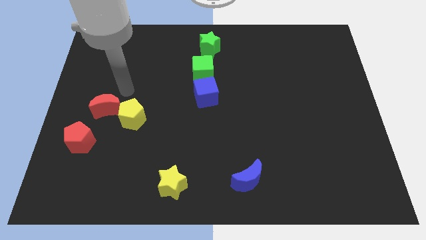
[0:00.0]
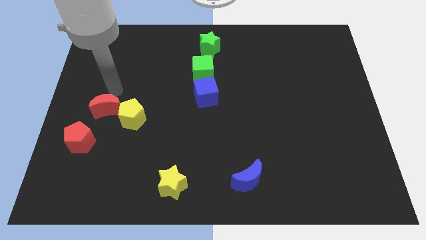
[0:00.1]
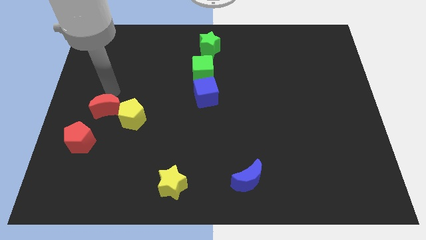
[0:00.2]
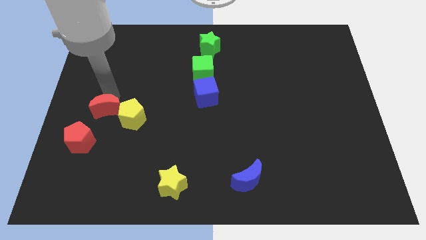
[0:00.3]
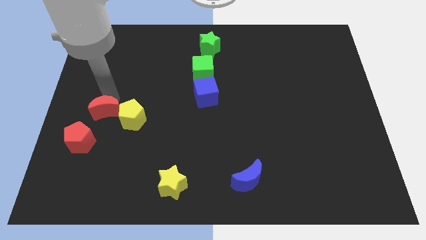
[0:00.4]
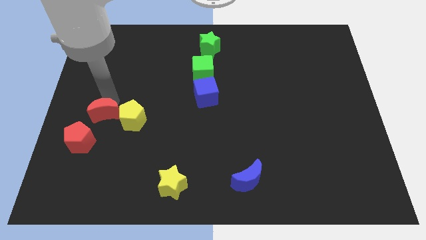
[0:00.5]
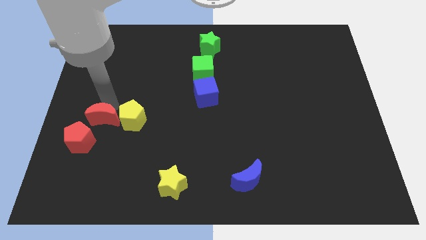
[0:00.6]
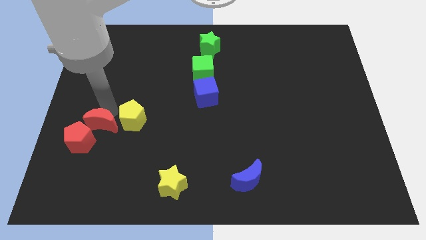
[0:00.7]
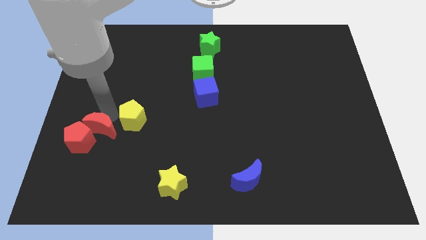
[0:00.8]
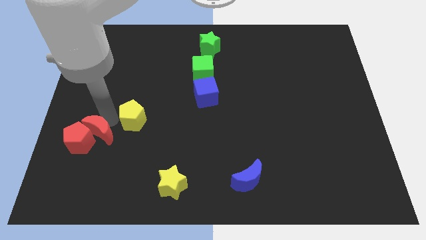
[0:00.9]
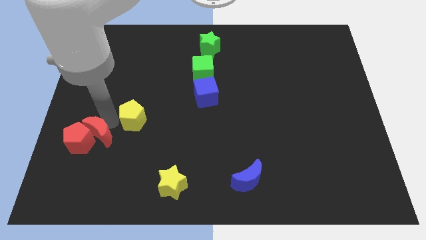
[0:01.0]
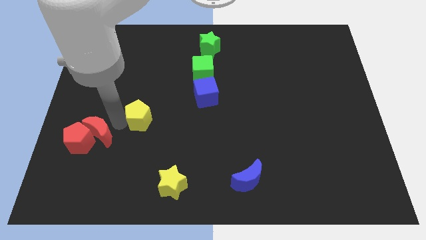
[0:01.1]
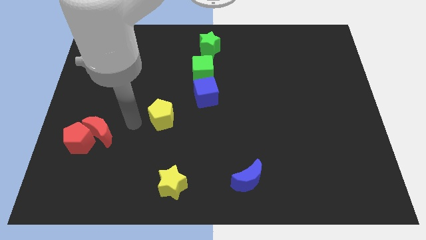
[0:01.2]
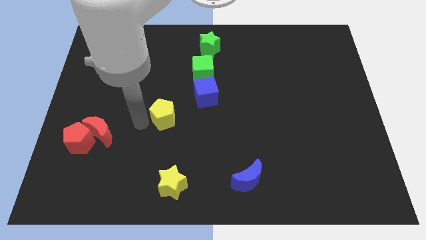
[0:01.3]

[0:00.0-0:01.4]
move the yellow pentagon slightly to the right

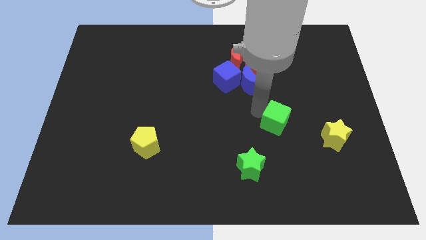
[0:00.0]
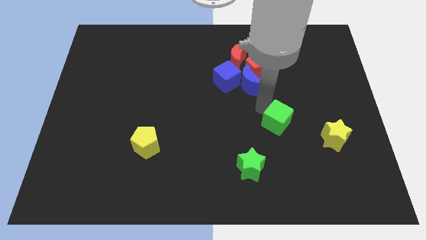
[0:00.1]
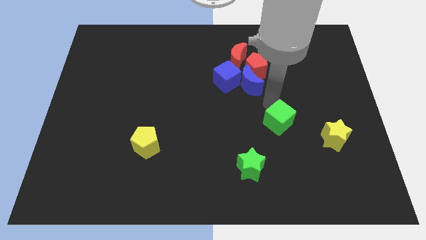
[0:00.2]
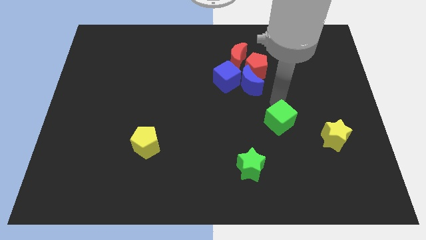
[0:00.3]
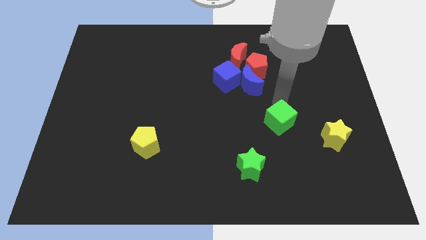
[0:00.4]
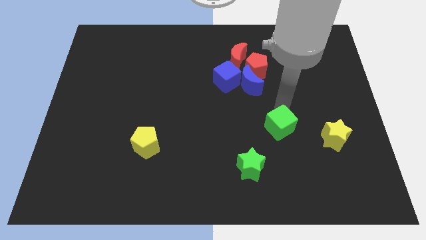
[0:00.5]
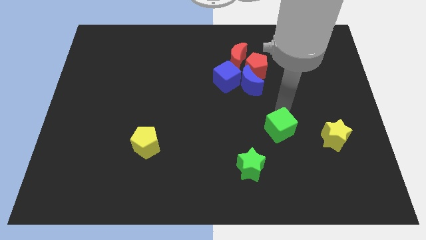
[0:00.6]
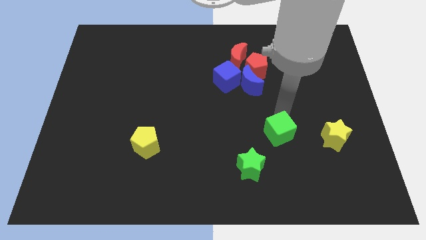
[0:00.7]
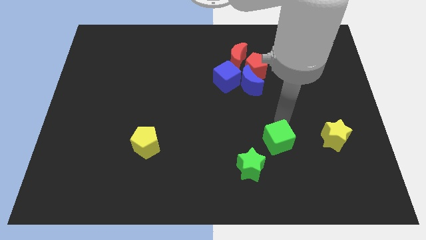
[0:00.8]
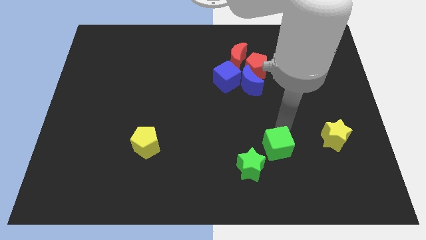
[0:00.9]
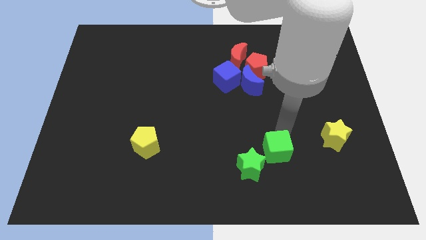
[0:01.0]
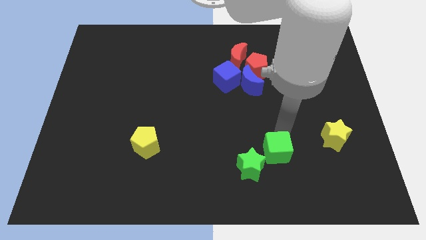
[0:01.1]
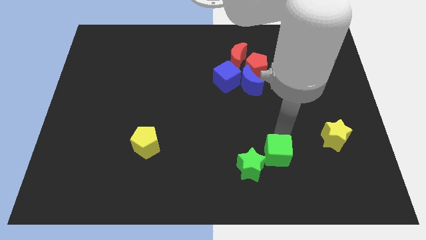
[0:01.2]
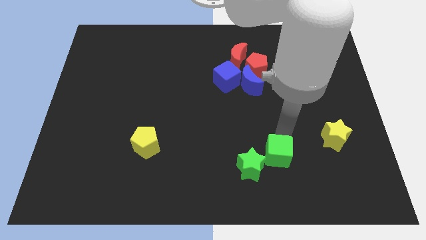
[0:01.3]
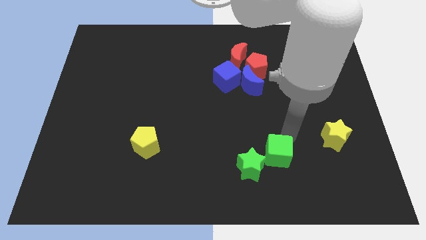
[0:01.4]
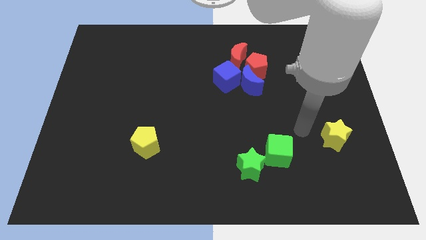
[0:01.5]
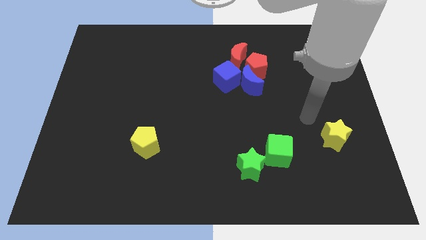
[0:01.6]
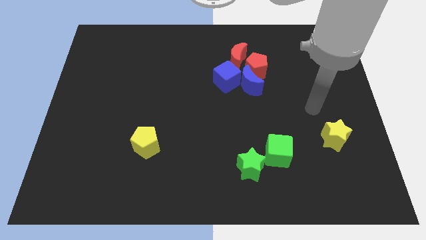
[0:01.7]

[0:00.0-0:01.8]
place the green cube at the top right side of the green star

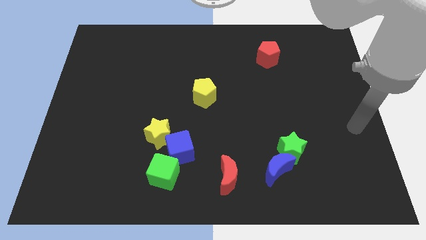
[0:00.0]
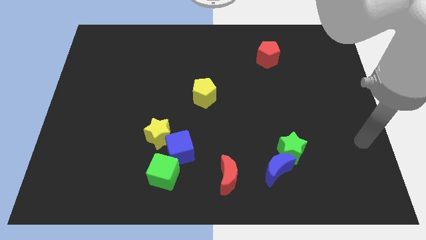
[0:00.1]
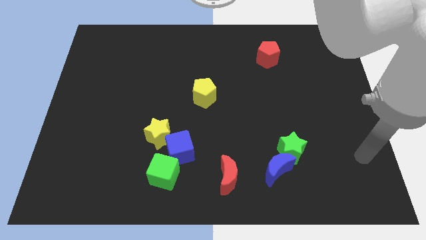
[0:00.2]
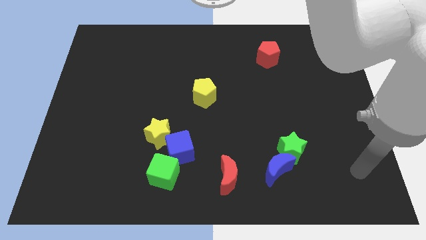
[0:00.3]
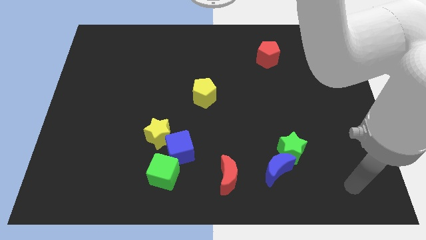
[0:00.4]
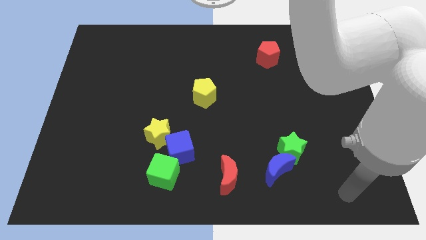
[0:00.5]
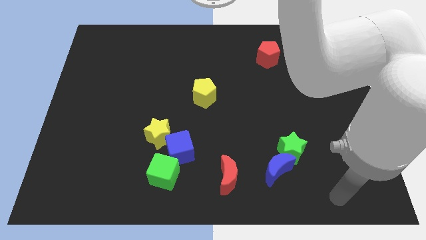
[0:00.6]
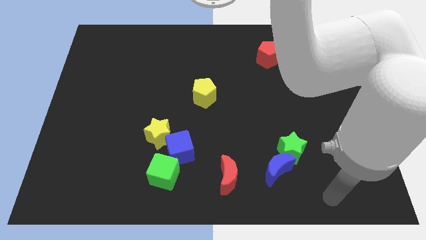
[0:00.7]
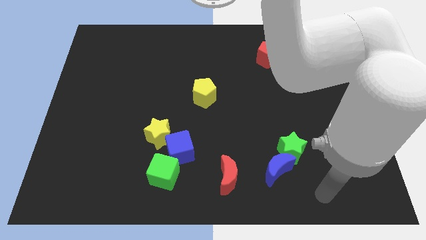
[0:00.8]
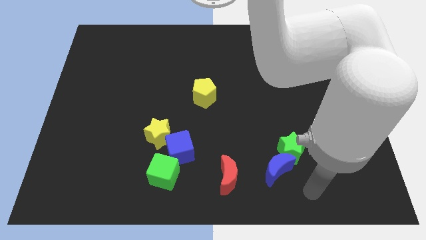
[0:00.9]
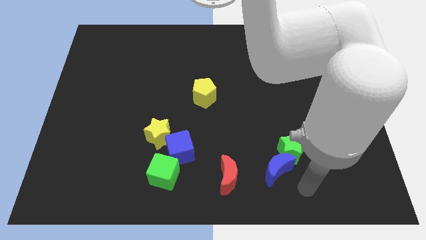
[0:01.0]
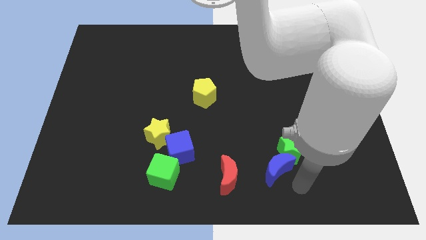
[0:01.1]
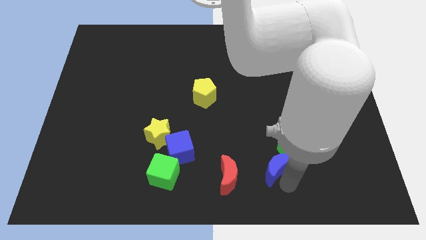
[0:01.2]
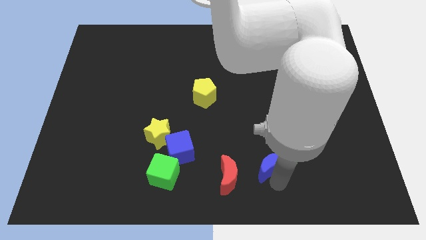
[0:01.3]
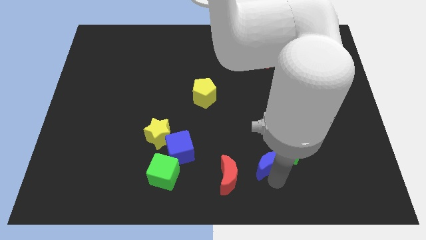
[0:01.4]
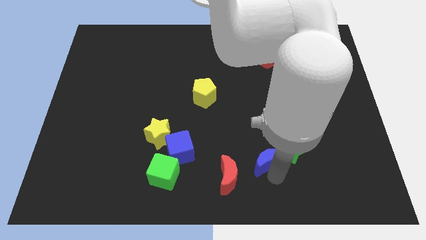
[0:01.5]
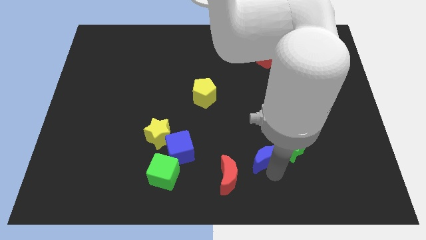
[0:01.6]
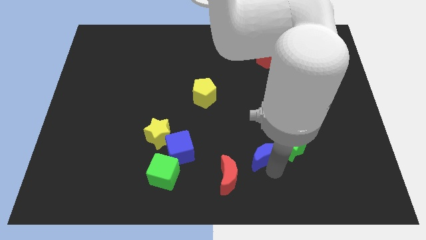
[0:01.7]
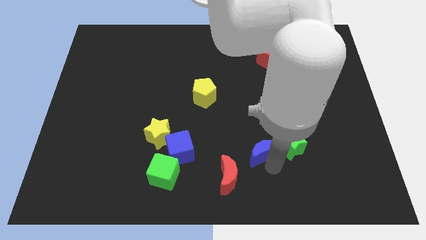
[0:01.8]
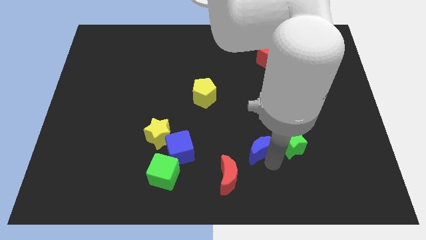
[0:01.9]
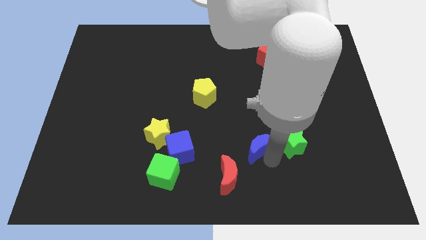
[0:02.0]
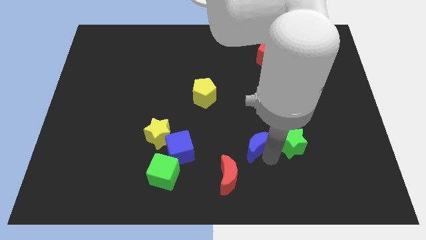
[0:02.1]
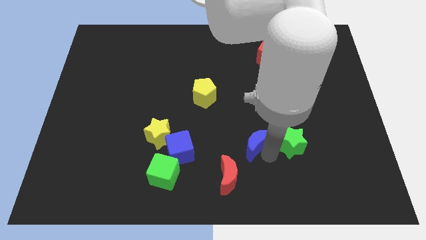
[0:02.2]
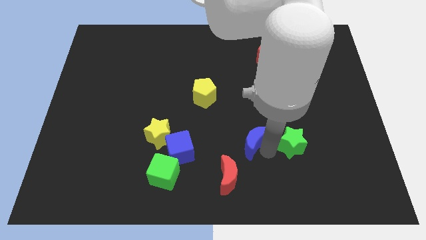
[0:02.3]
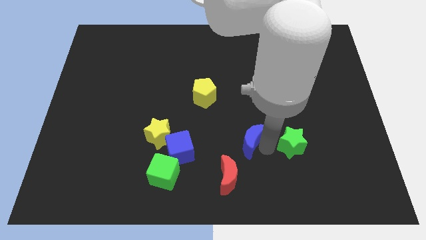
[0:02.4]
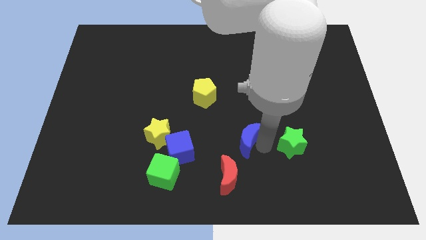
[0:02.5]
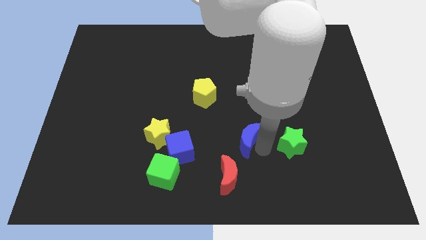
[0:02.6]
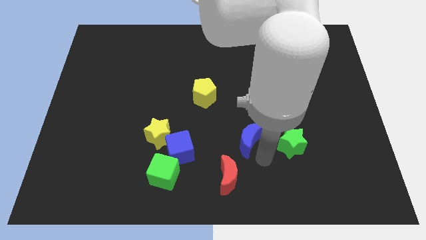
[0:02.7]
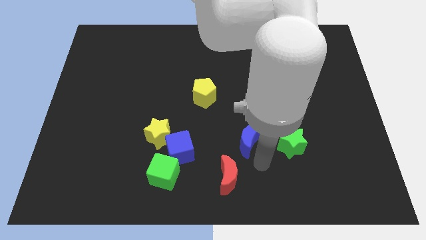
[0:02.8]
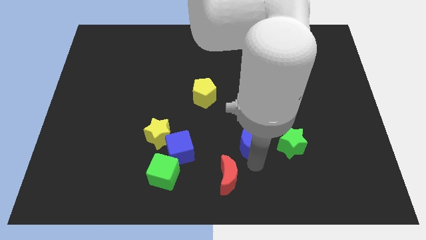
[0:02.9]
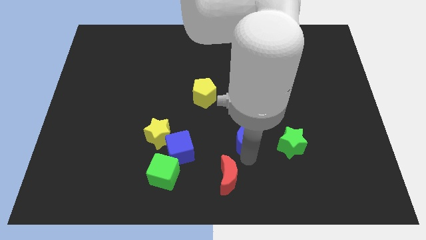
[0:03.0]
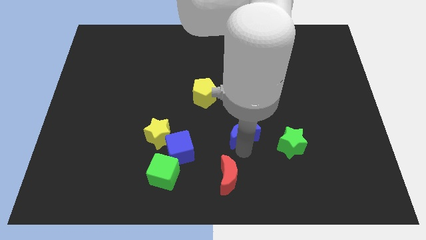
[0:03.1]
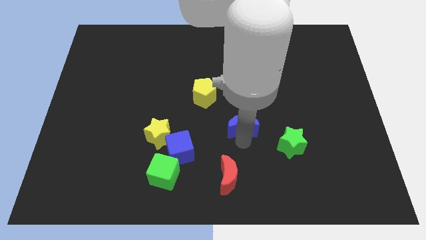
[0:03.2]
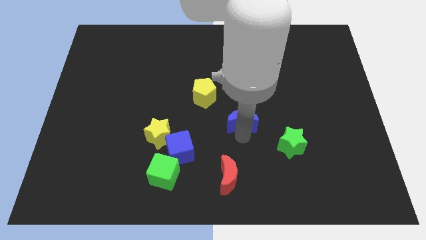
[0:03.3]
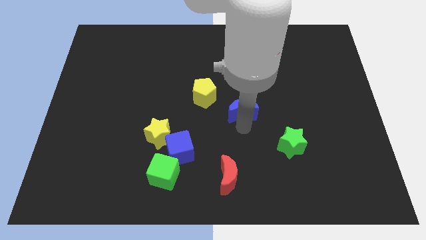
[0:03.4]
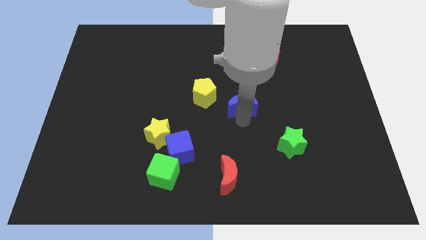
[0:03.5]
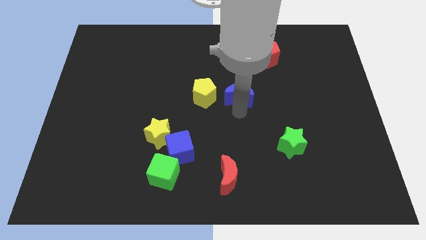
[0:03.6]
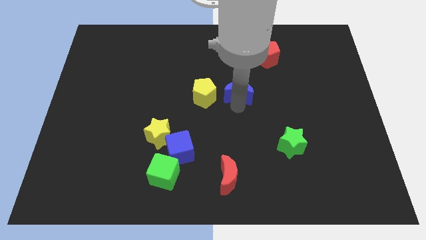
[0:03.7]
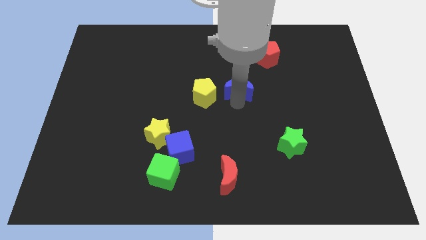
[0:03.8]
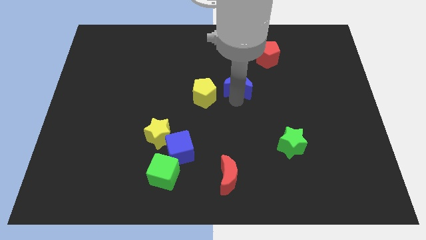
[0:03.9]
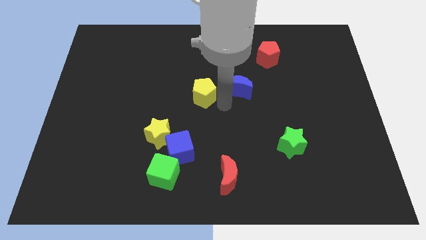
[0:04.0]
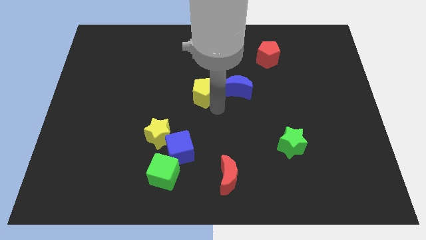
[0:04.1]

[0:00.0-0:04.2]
move the blue crescent to the right of yellow pentagon

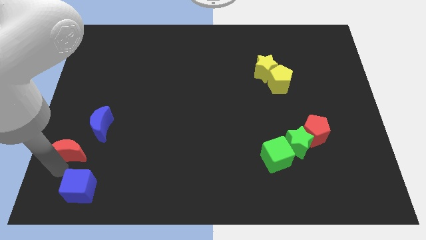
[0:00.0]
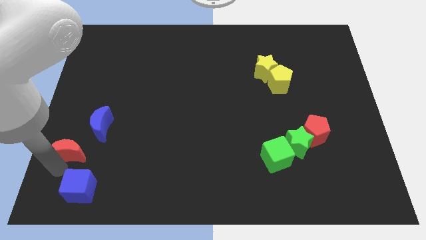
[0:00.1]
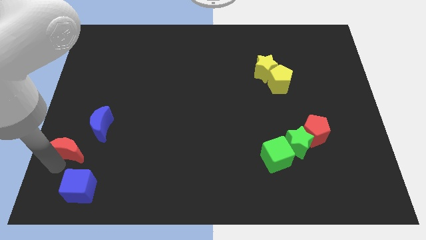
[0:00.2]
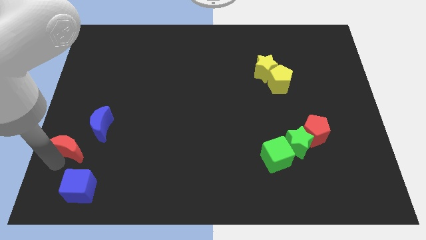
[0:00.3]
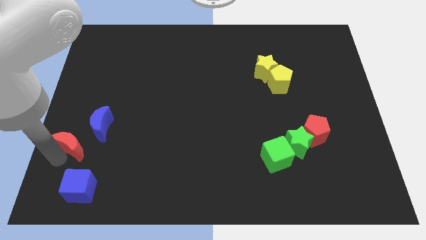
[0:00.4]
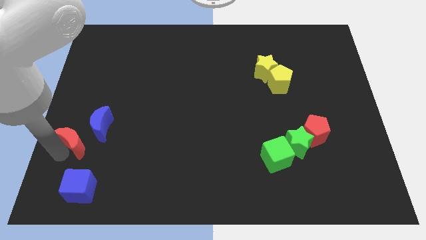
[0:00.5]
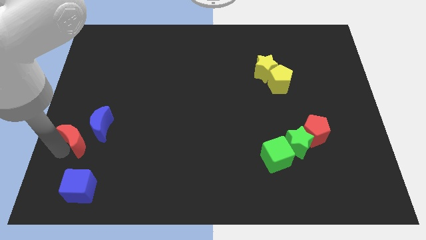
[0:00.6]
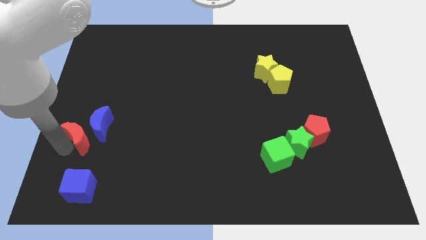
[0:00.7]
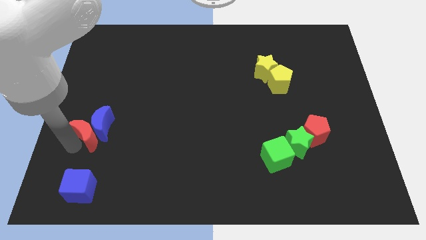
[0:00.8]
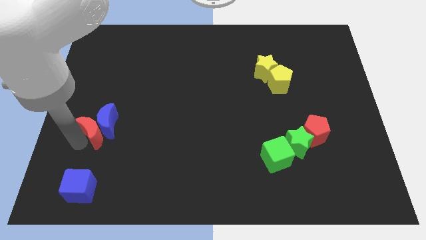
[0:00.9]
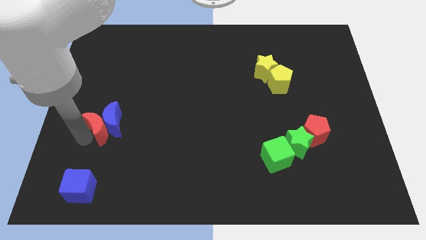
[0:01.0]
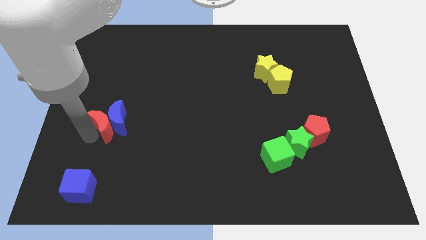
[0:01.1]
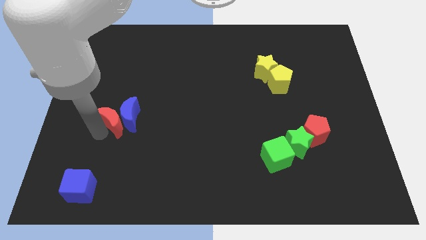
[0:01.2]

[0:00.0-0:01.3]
push the red crescent in to the blue moon

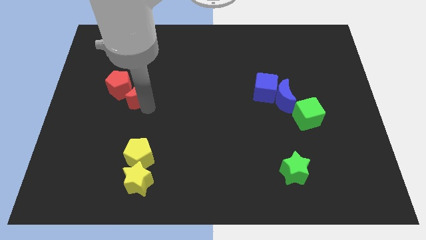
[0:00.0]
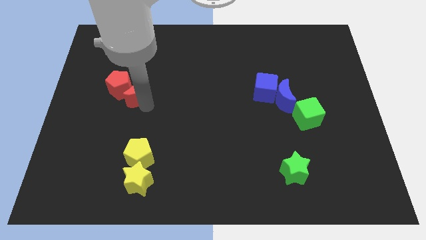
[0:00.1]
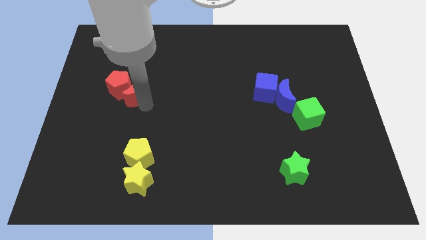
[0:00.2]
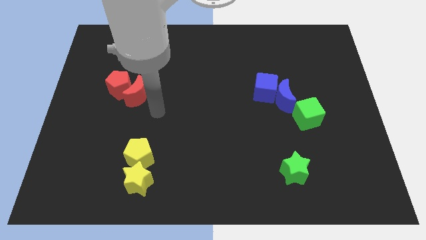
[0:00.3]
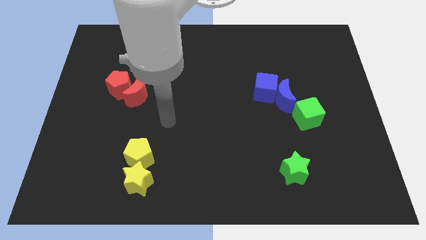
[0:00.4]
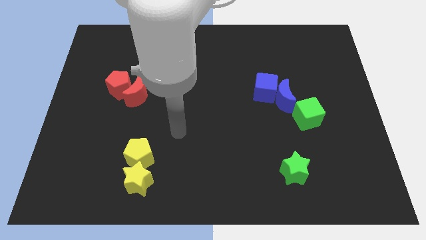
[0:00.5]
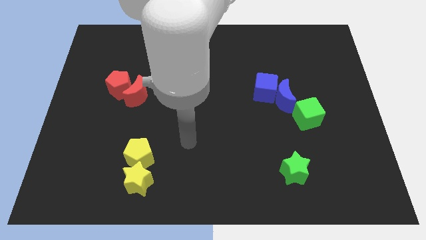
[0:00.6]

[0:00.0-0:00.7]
move your arm away from red moon
